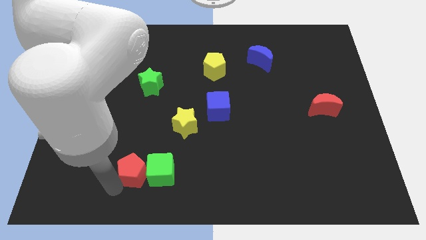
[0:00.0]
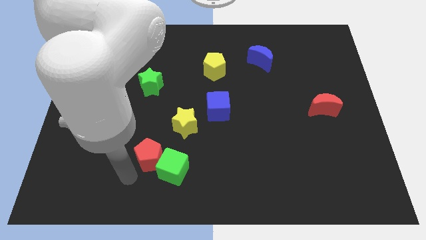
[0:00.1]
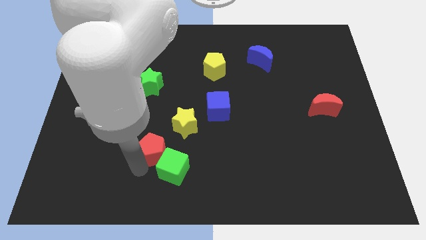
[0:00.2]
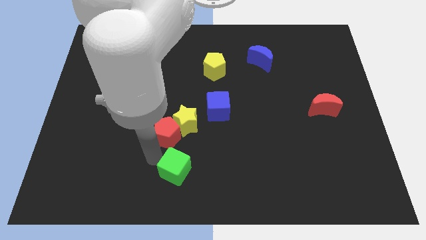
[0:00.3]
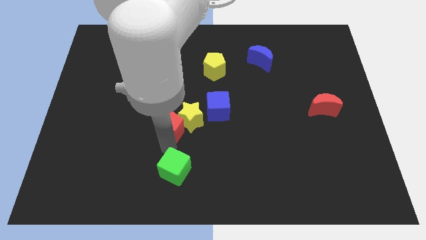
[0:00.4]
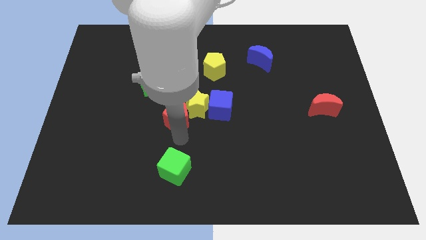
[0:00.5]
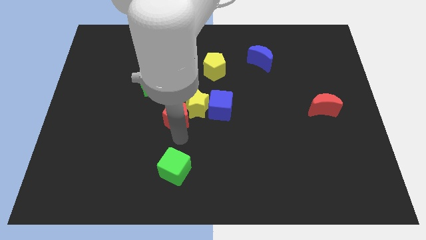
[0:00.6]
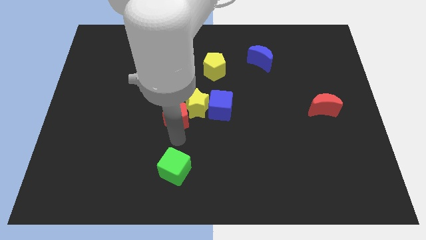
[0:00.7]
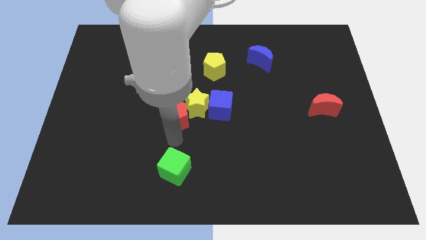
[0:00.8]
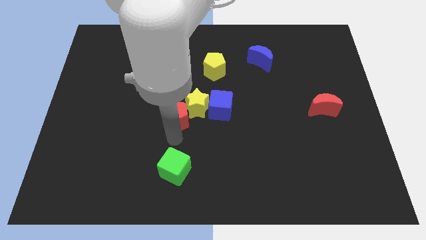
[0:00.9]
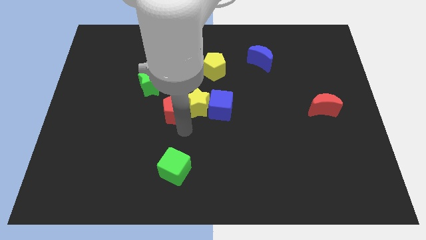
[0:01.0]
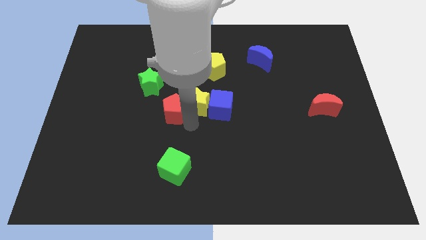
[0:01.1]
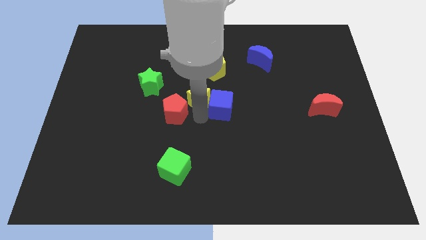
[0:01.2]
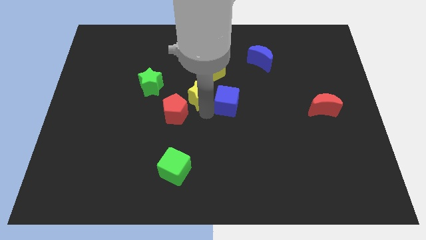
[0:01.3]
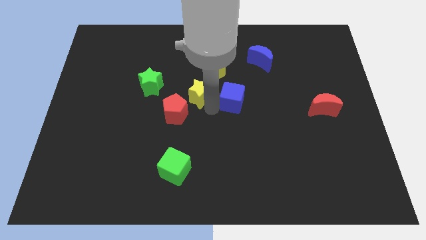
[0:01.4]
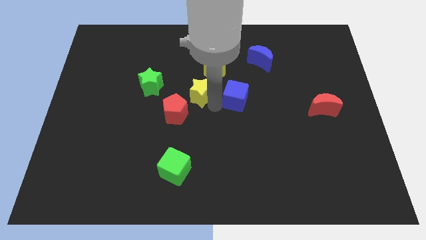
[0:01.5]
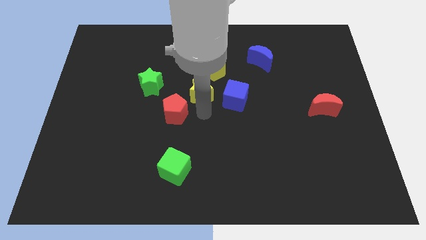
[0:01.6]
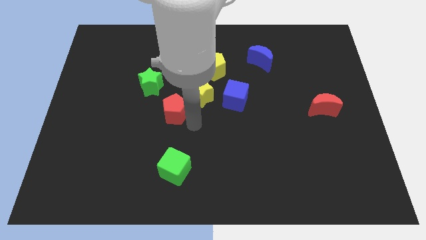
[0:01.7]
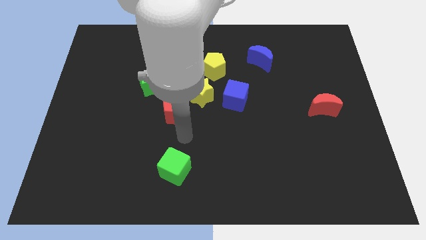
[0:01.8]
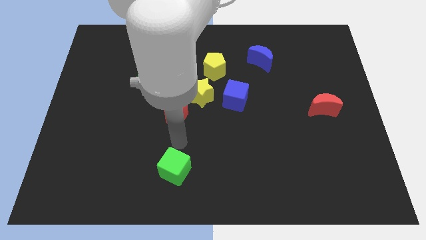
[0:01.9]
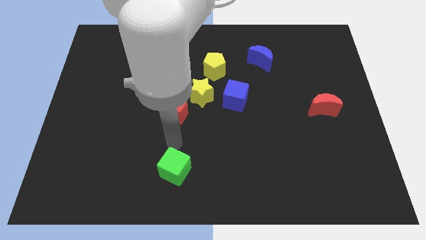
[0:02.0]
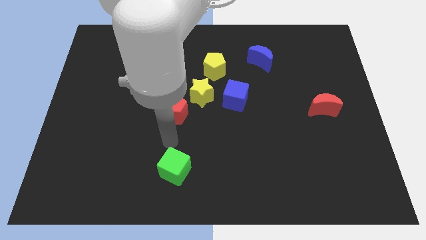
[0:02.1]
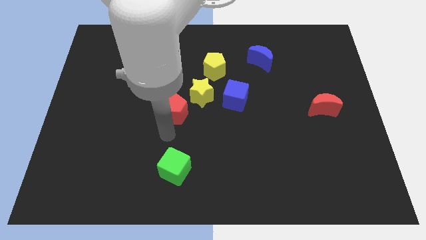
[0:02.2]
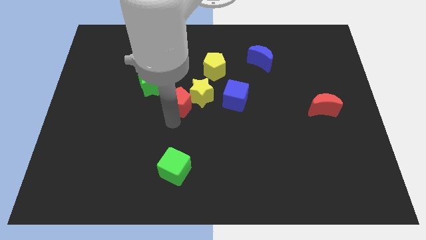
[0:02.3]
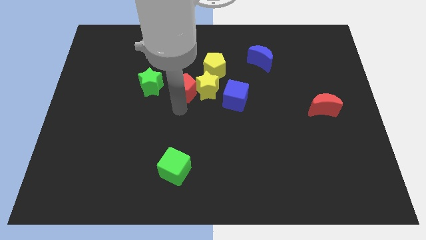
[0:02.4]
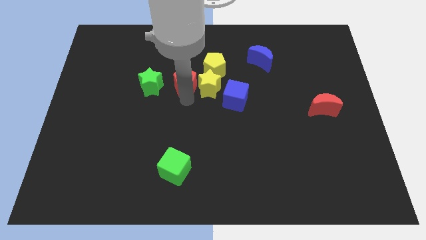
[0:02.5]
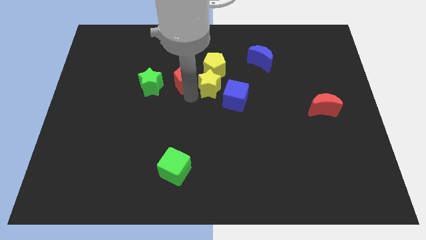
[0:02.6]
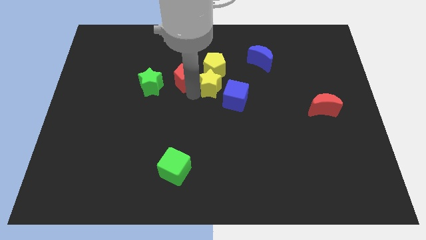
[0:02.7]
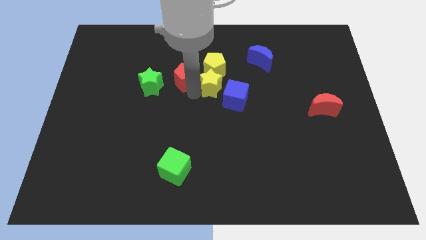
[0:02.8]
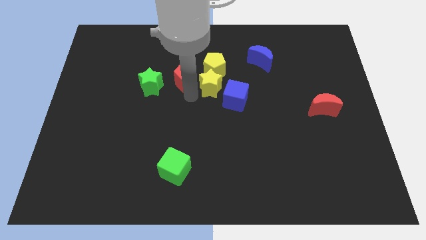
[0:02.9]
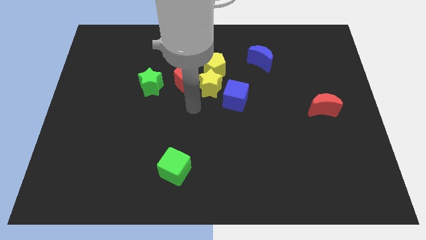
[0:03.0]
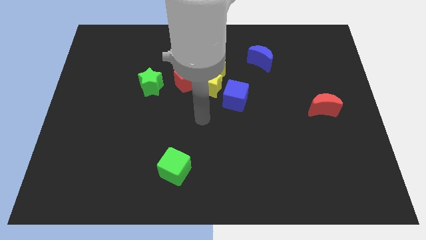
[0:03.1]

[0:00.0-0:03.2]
move the red pentagon yellow star and blue cube towards yellow pentagon

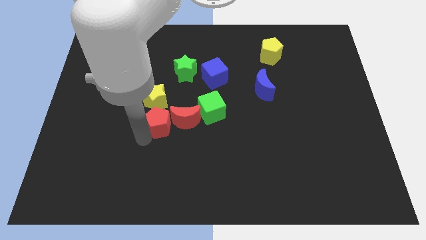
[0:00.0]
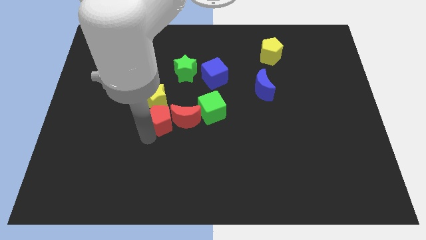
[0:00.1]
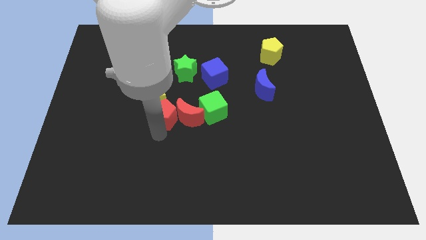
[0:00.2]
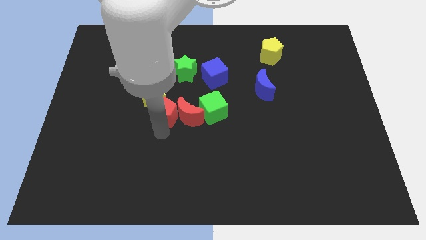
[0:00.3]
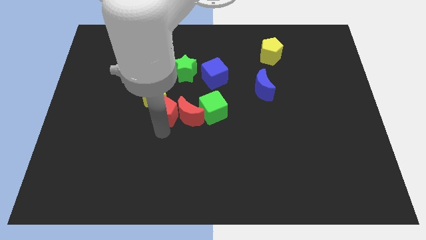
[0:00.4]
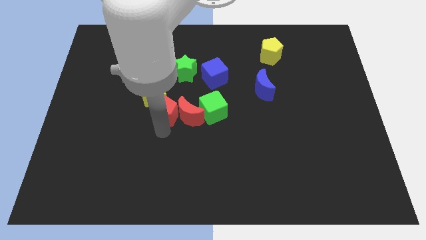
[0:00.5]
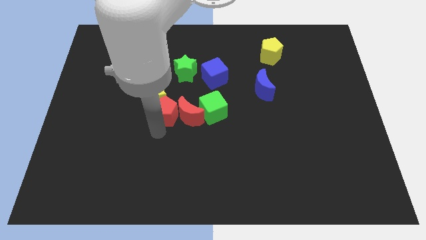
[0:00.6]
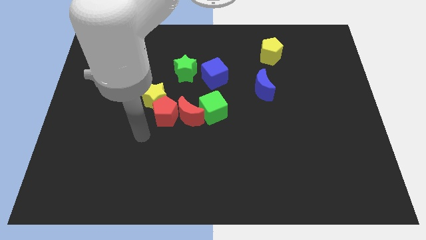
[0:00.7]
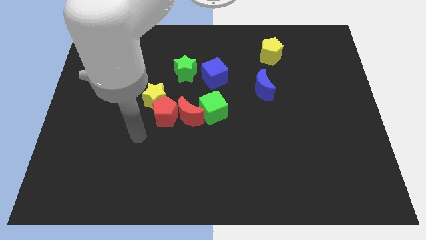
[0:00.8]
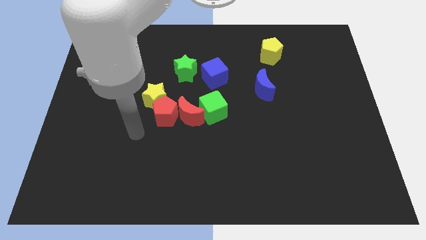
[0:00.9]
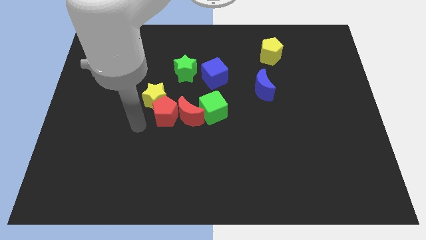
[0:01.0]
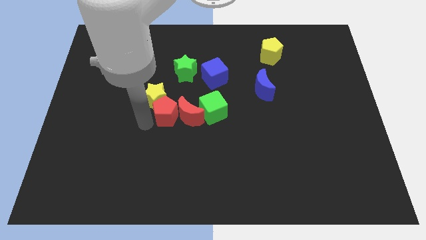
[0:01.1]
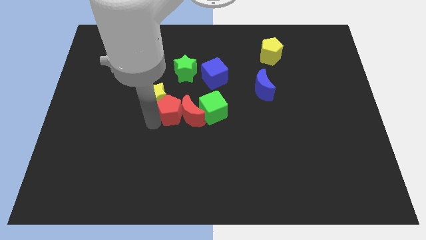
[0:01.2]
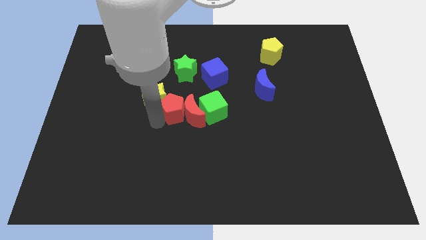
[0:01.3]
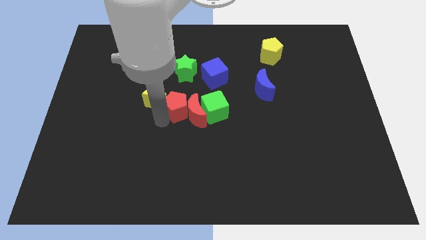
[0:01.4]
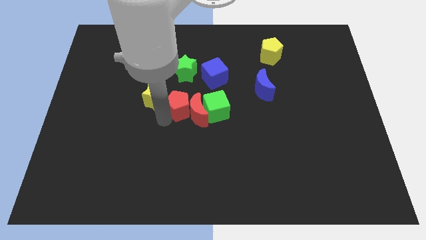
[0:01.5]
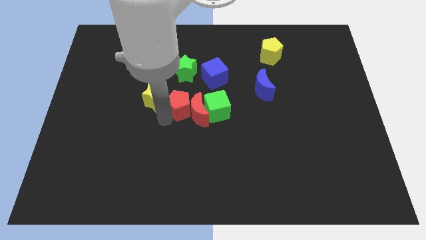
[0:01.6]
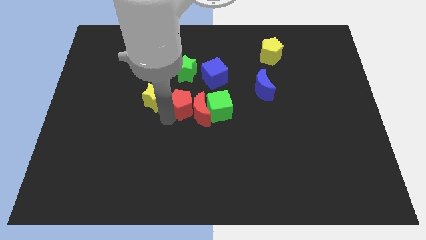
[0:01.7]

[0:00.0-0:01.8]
push the red pentagon in between the yellow star and red moon

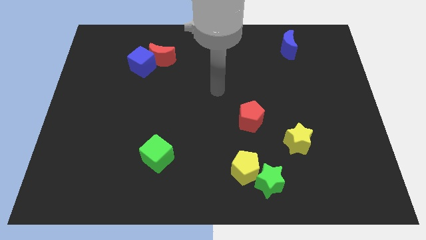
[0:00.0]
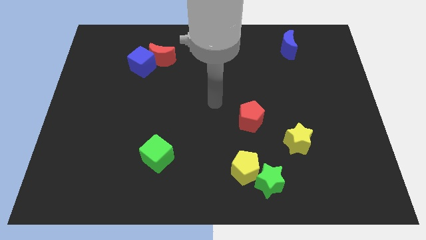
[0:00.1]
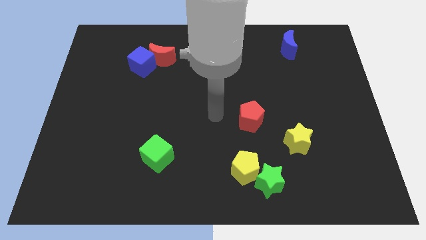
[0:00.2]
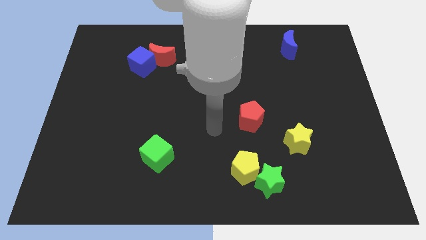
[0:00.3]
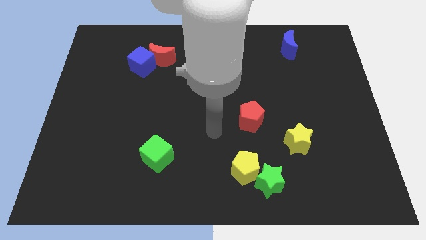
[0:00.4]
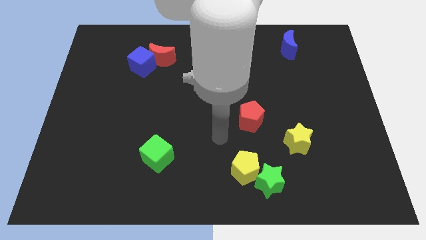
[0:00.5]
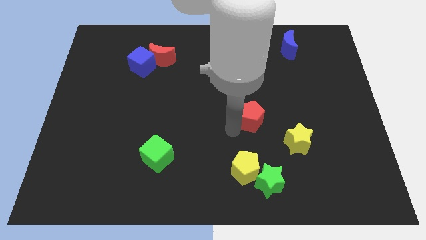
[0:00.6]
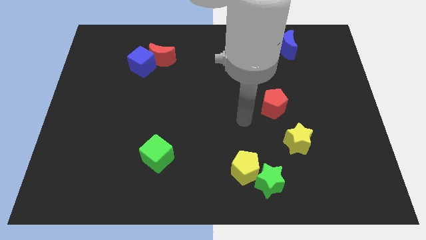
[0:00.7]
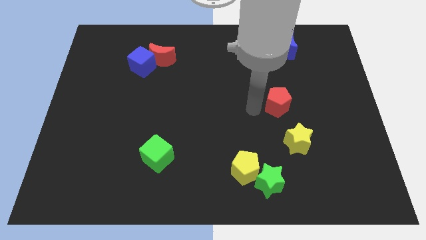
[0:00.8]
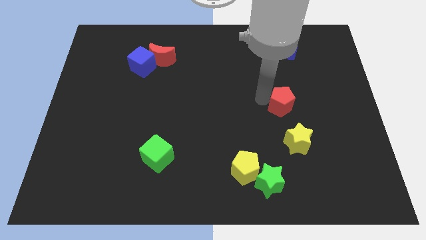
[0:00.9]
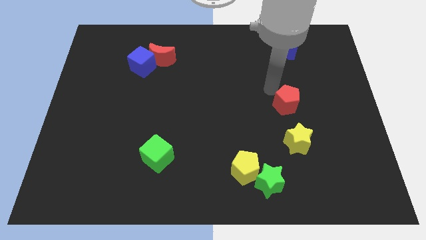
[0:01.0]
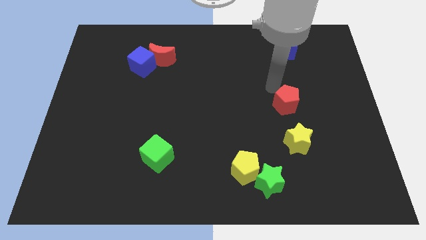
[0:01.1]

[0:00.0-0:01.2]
push the red pentagon to the top side of the yellow star

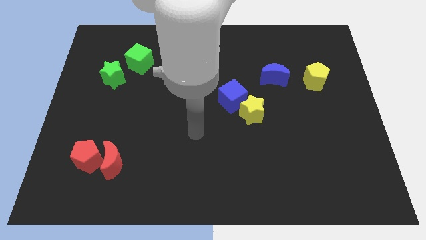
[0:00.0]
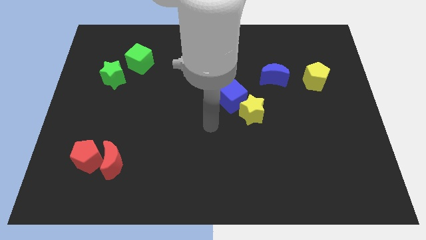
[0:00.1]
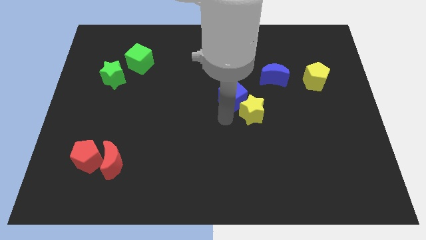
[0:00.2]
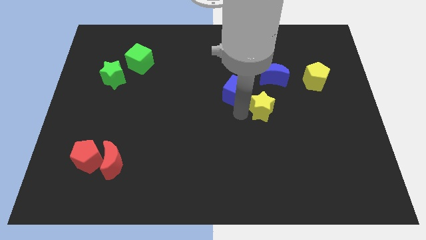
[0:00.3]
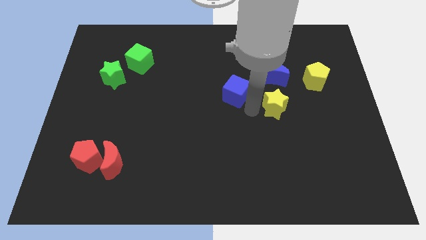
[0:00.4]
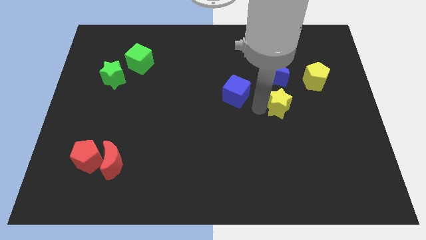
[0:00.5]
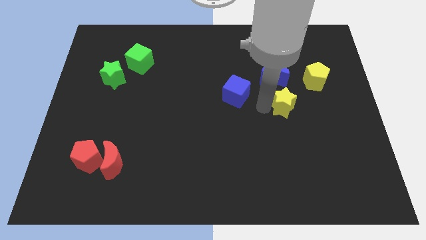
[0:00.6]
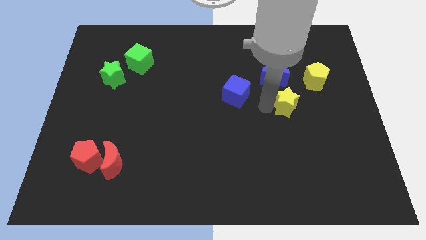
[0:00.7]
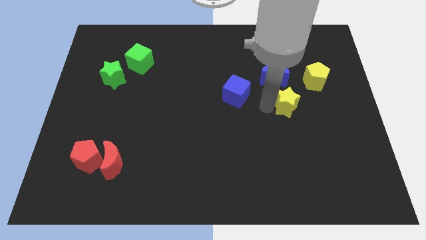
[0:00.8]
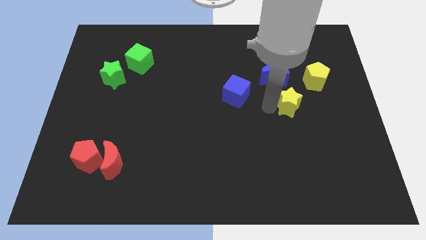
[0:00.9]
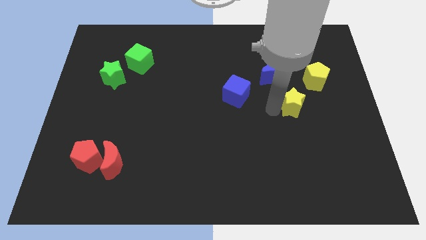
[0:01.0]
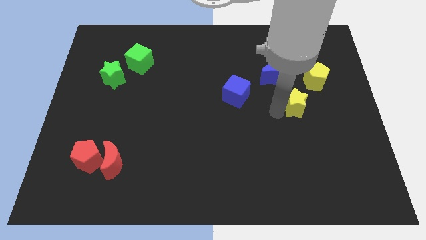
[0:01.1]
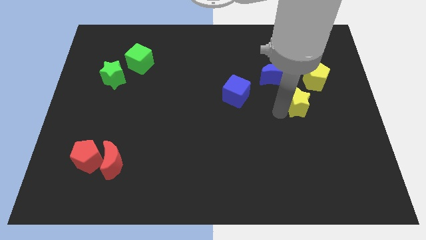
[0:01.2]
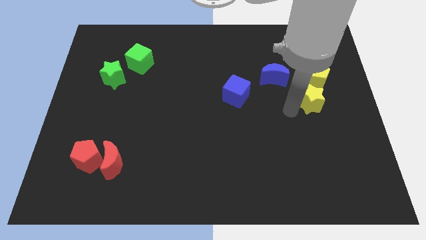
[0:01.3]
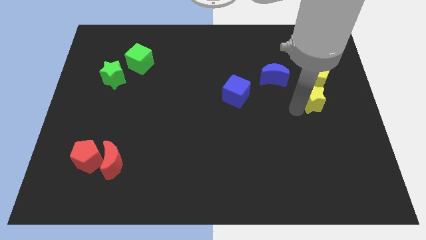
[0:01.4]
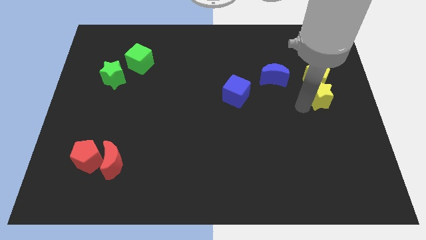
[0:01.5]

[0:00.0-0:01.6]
separate the yellow star from blue cube

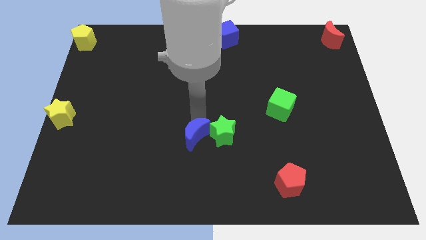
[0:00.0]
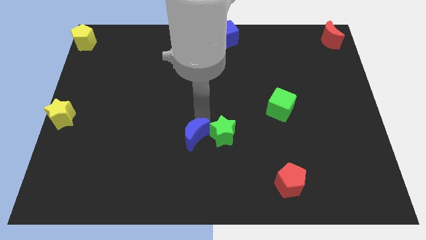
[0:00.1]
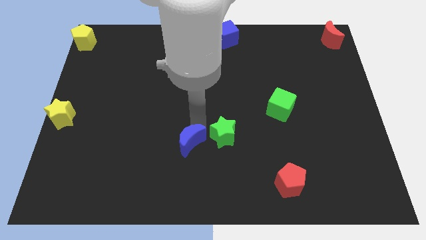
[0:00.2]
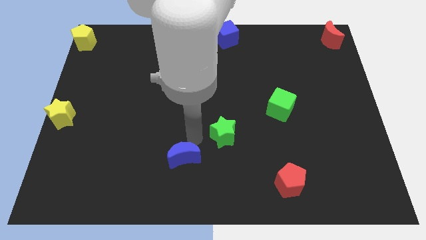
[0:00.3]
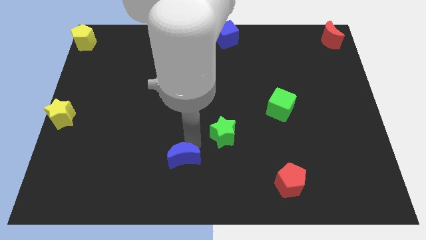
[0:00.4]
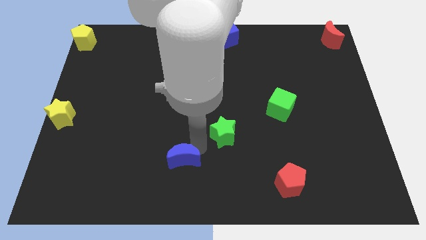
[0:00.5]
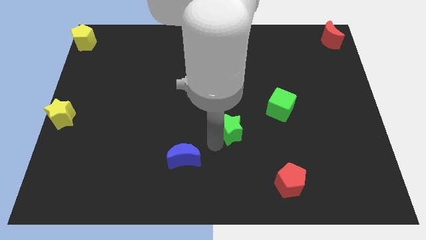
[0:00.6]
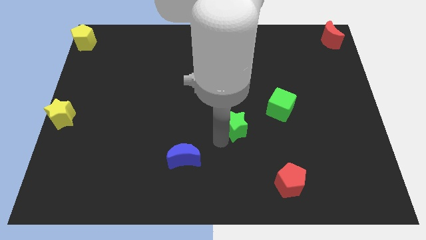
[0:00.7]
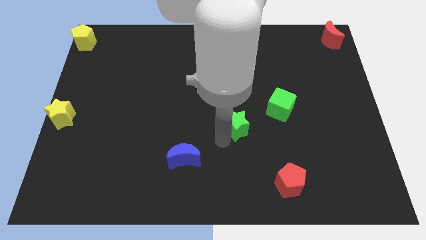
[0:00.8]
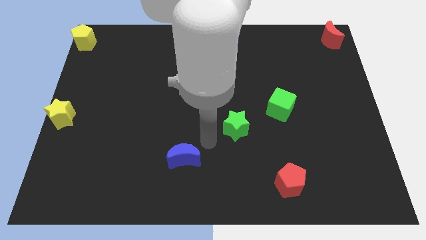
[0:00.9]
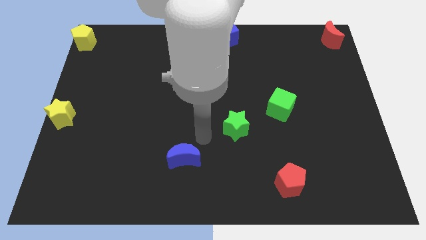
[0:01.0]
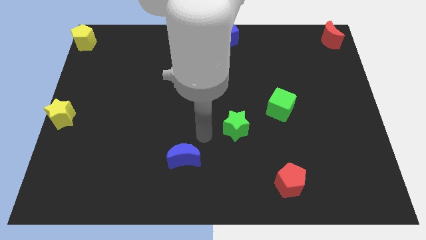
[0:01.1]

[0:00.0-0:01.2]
separate blue moon from green star
